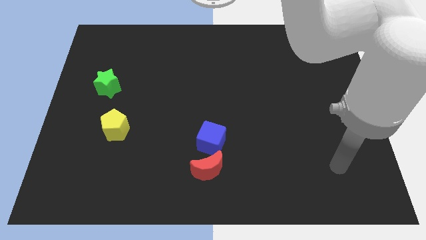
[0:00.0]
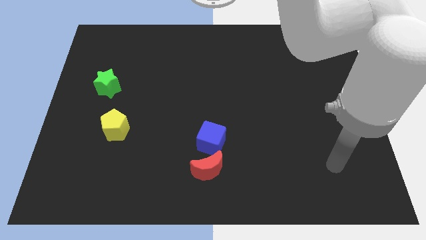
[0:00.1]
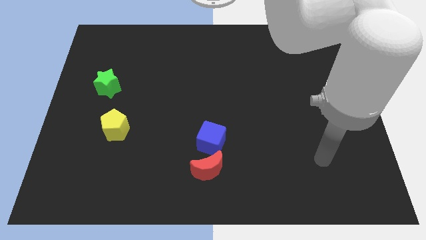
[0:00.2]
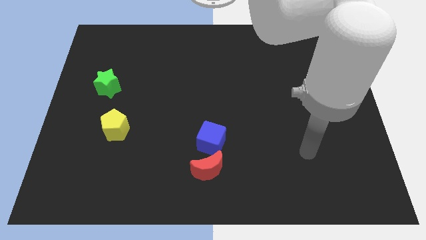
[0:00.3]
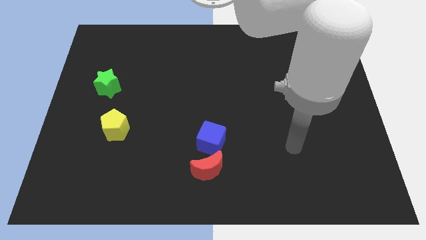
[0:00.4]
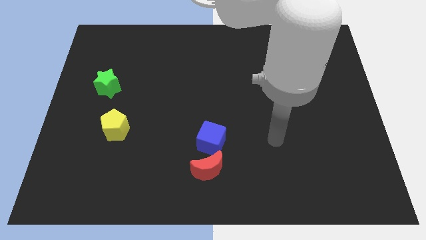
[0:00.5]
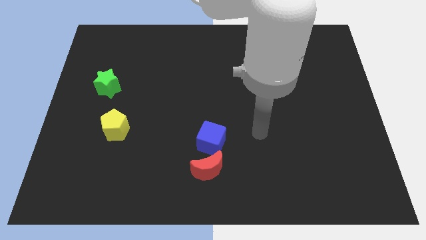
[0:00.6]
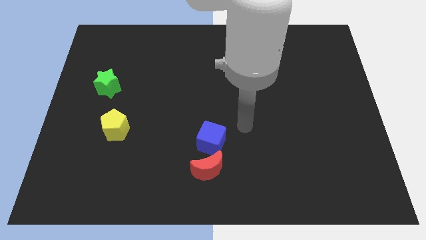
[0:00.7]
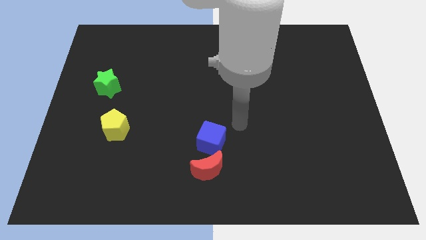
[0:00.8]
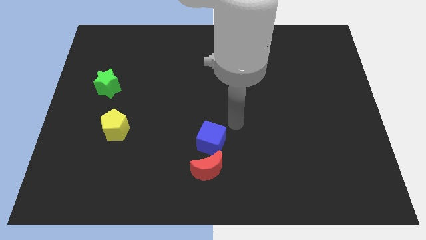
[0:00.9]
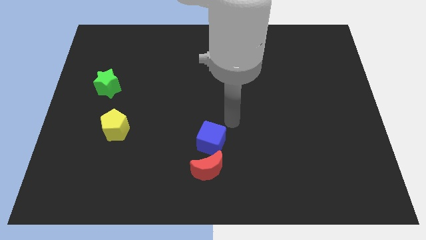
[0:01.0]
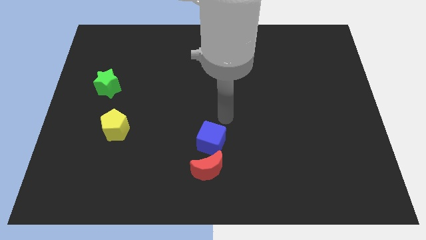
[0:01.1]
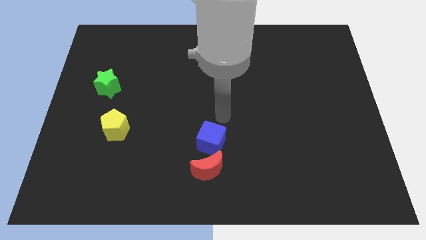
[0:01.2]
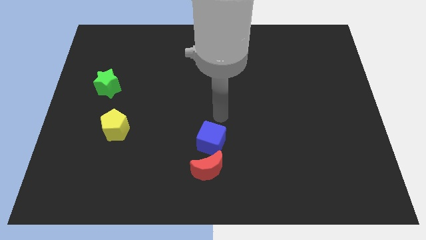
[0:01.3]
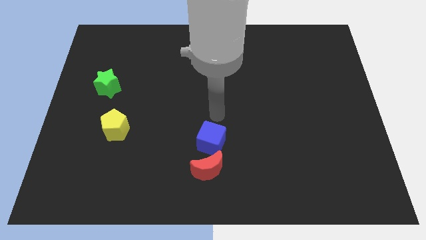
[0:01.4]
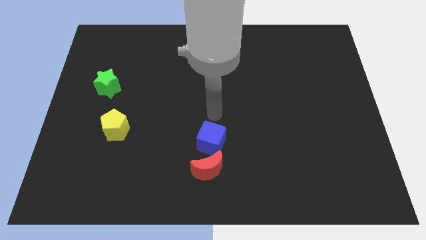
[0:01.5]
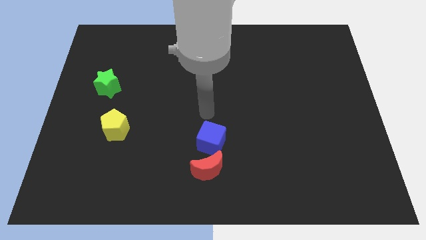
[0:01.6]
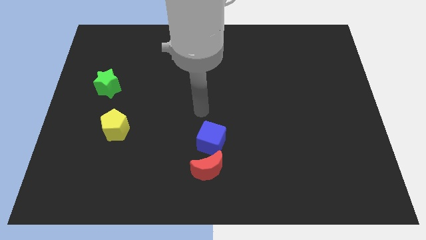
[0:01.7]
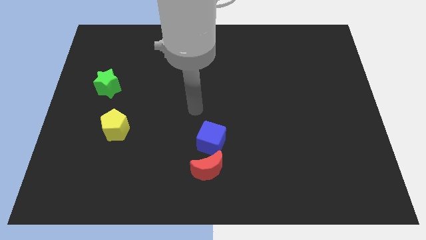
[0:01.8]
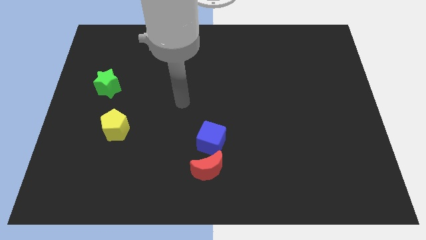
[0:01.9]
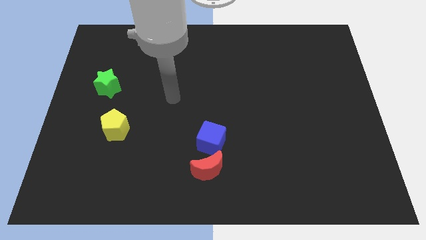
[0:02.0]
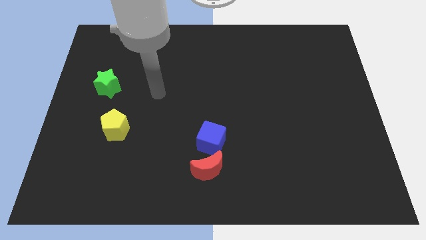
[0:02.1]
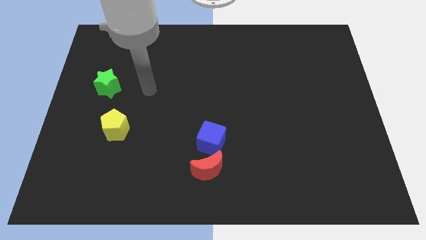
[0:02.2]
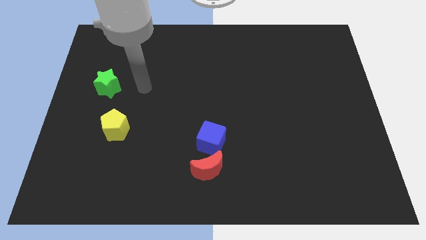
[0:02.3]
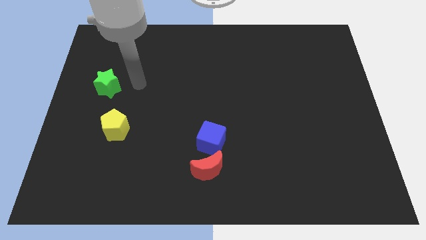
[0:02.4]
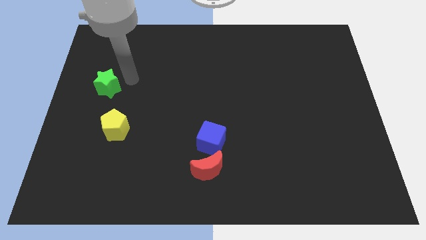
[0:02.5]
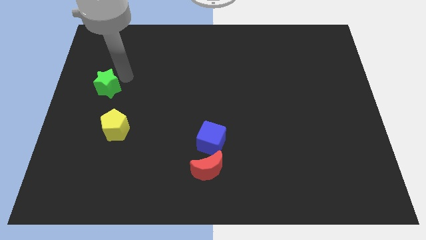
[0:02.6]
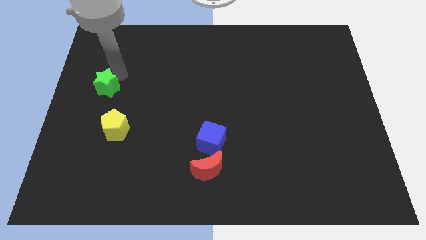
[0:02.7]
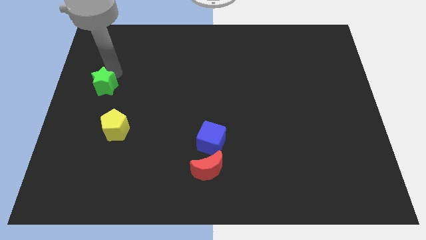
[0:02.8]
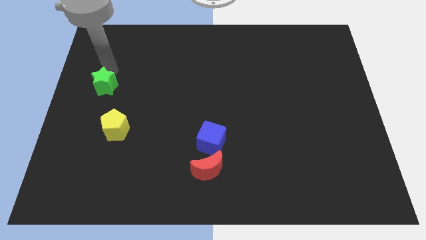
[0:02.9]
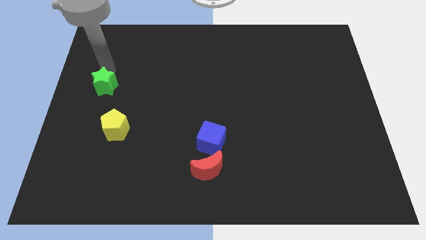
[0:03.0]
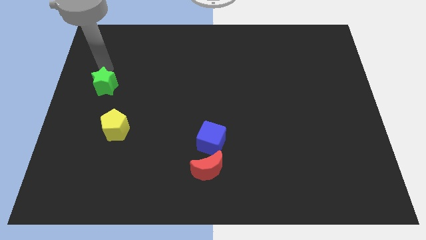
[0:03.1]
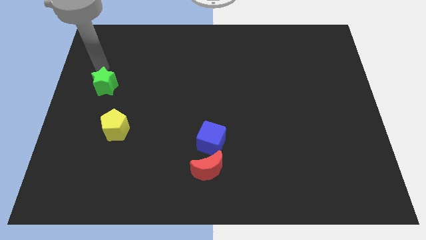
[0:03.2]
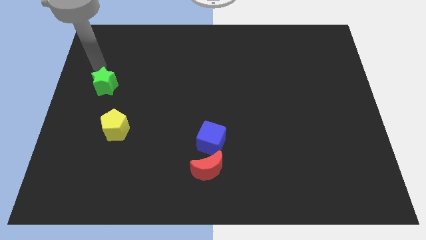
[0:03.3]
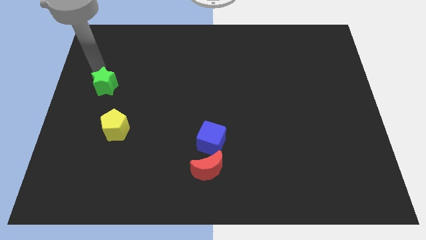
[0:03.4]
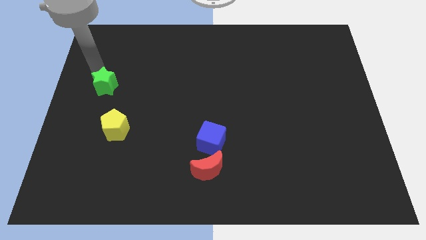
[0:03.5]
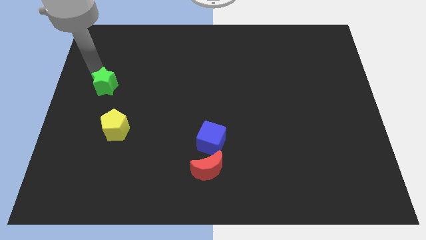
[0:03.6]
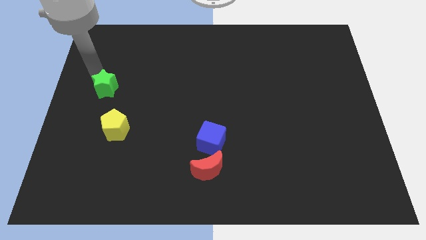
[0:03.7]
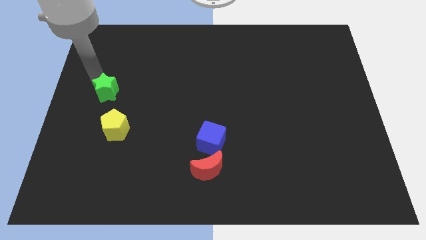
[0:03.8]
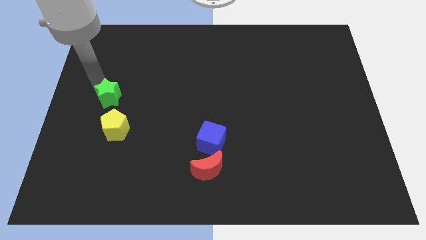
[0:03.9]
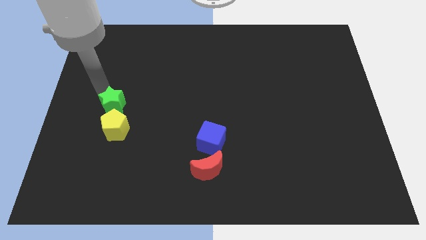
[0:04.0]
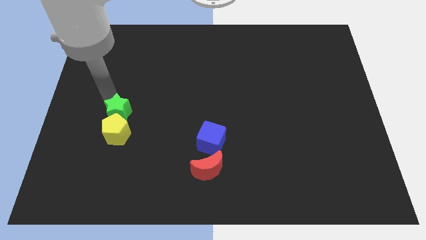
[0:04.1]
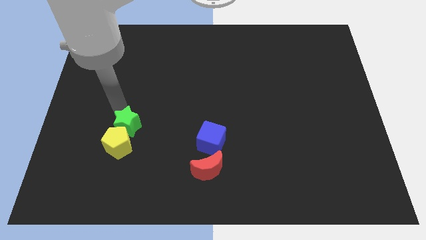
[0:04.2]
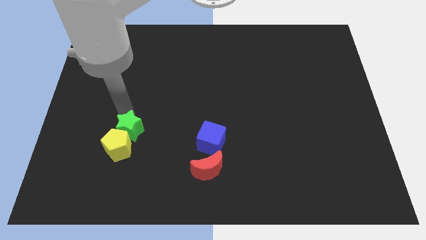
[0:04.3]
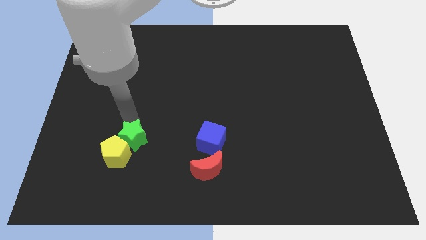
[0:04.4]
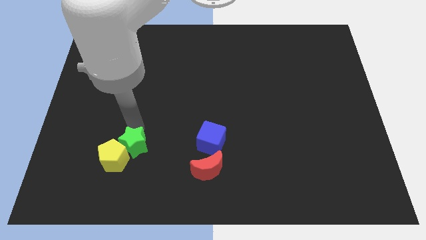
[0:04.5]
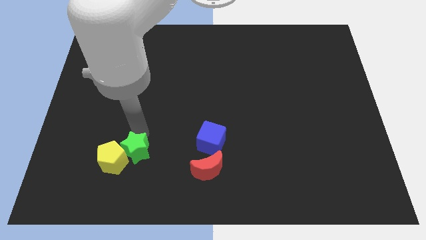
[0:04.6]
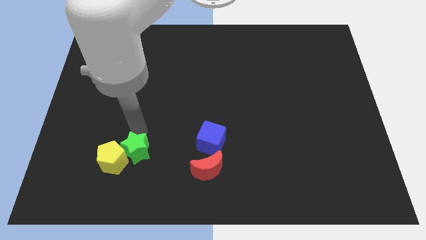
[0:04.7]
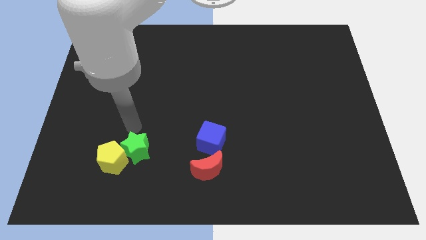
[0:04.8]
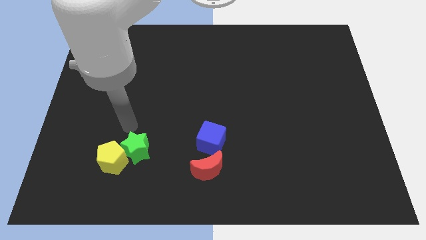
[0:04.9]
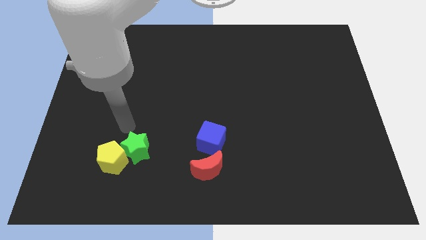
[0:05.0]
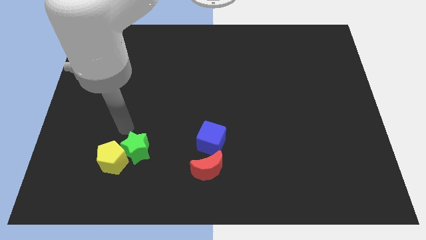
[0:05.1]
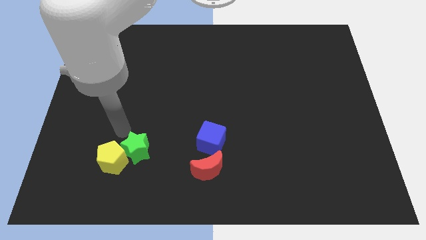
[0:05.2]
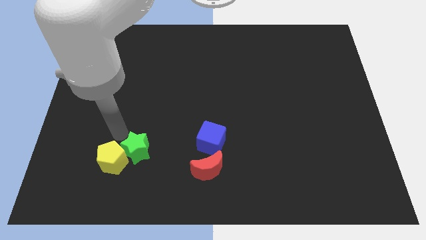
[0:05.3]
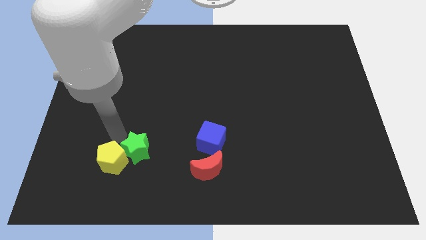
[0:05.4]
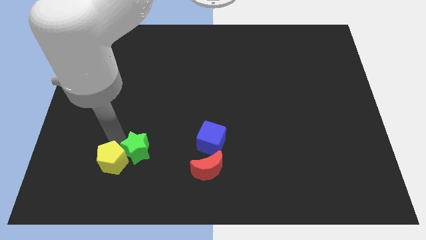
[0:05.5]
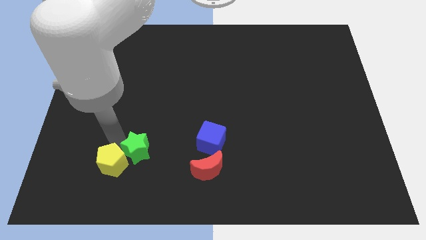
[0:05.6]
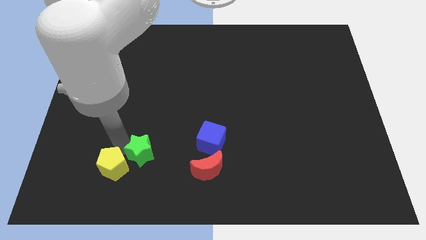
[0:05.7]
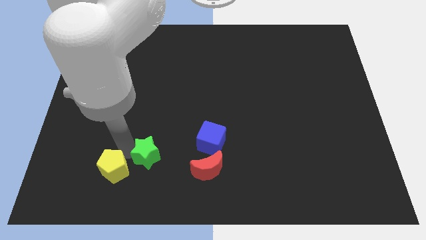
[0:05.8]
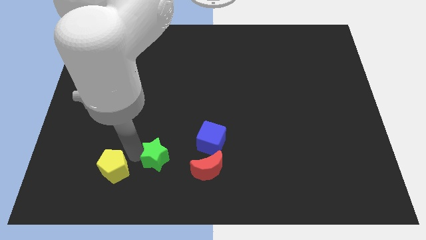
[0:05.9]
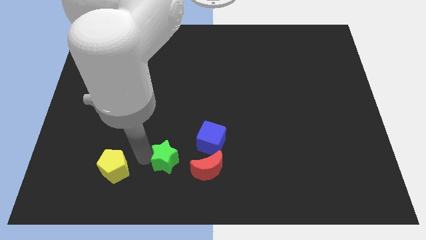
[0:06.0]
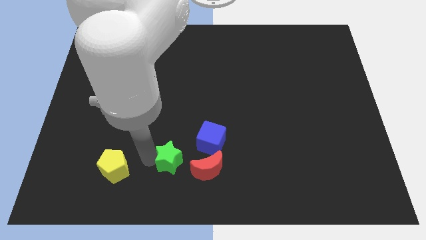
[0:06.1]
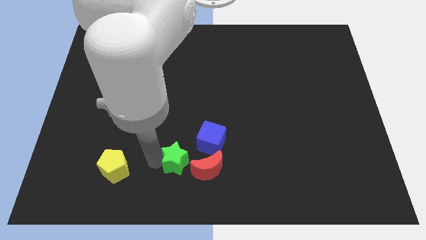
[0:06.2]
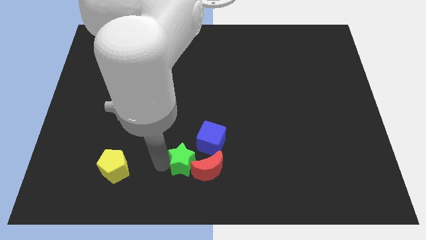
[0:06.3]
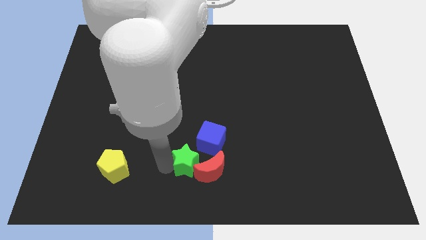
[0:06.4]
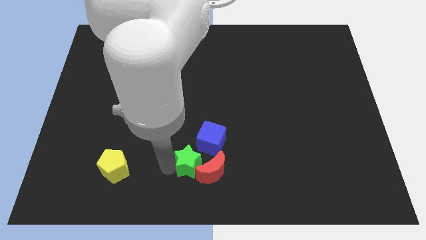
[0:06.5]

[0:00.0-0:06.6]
slide the green block to the red block

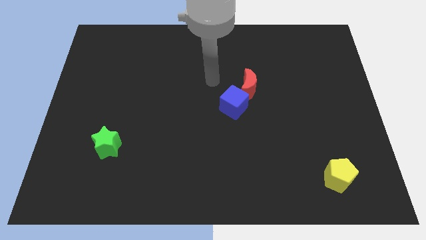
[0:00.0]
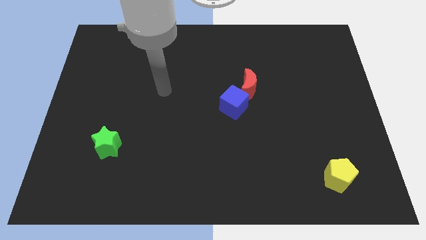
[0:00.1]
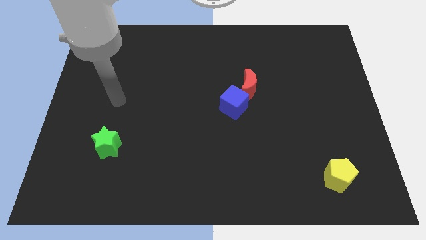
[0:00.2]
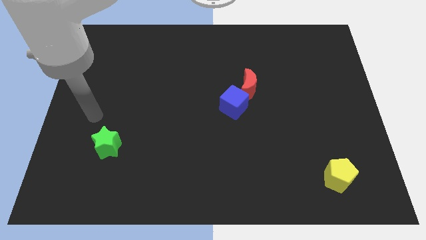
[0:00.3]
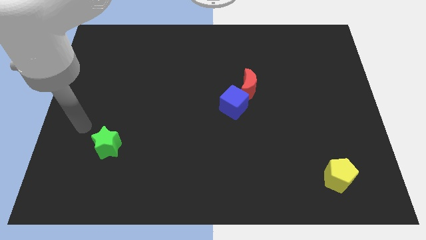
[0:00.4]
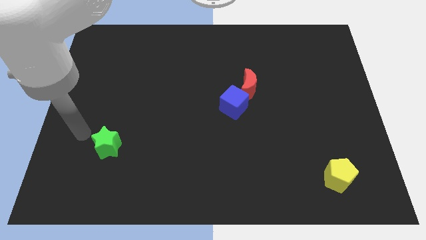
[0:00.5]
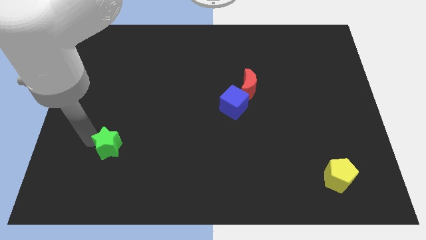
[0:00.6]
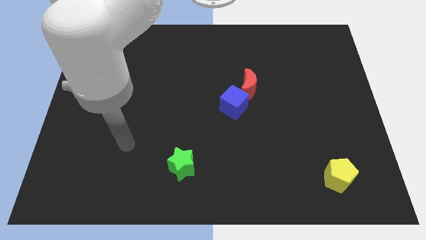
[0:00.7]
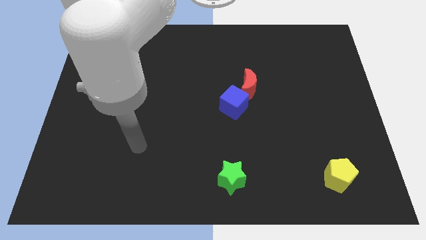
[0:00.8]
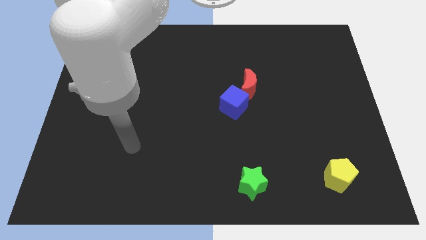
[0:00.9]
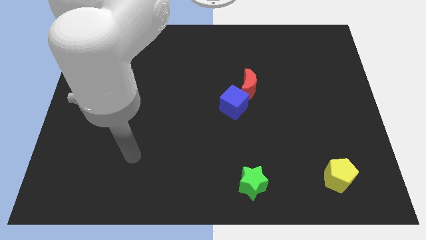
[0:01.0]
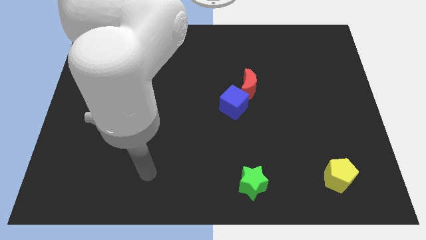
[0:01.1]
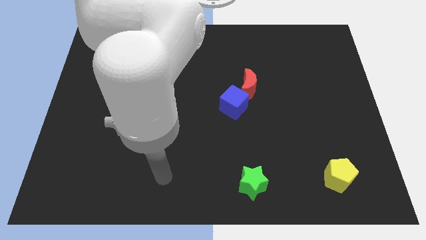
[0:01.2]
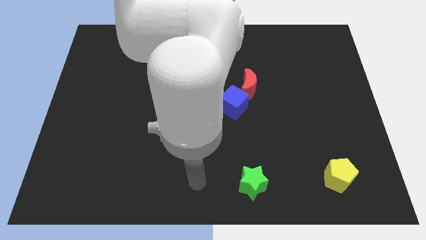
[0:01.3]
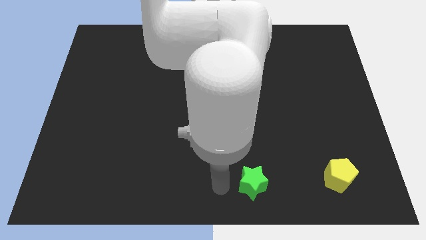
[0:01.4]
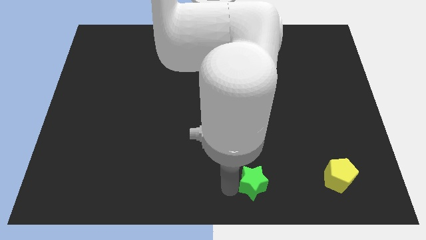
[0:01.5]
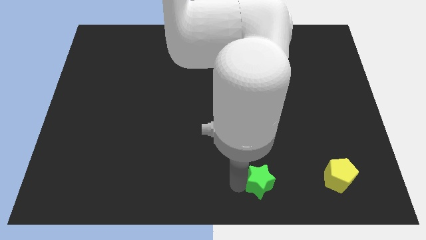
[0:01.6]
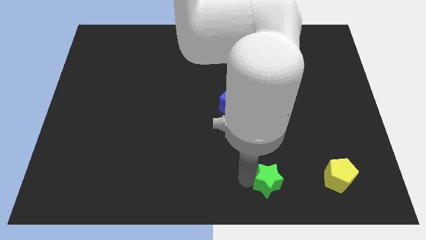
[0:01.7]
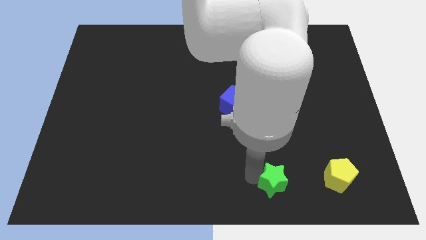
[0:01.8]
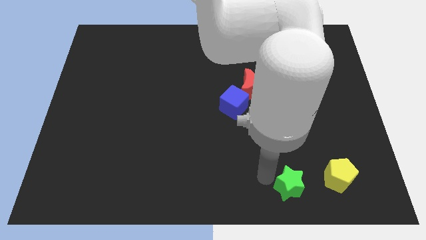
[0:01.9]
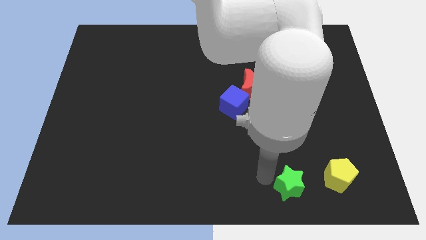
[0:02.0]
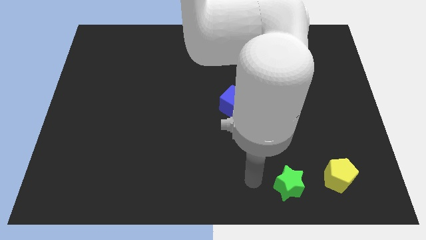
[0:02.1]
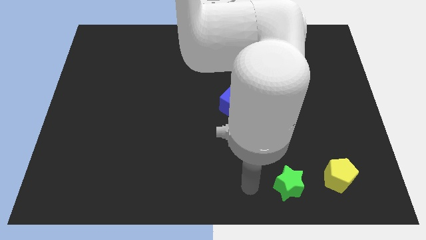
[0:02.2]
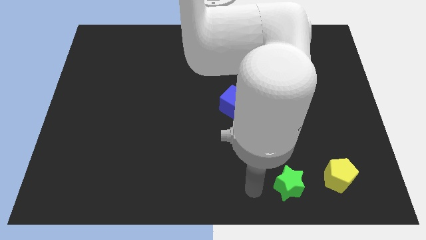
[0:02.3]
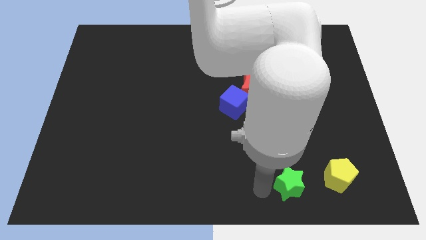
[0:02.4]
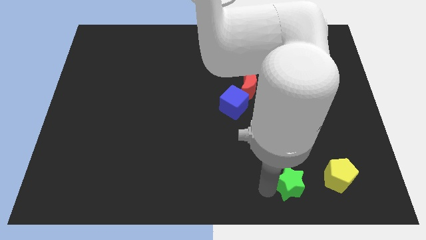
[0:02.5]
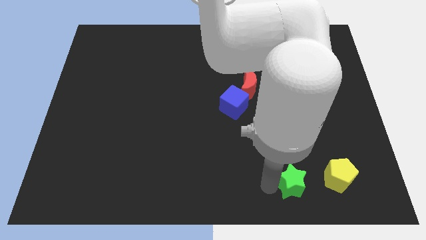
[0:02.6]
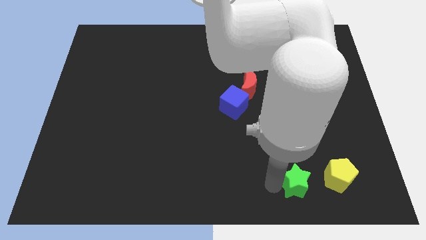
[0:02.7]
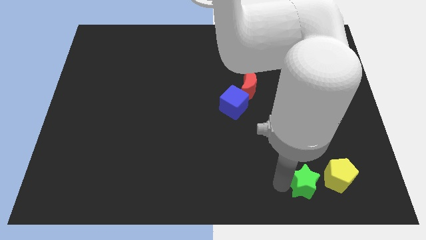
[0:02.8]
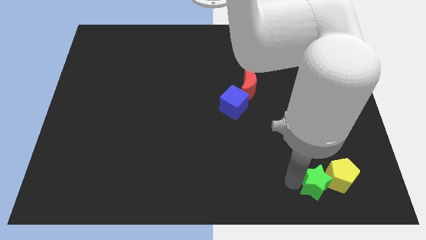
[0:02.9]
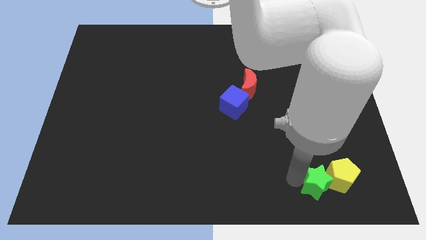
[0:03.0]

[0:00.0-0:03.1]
push the green block next to the pentagon
